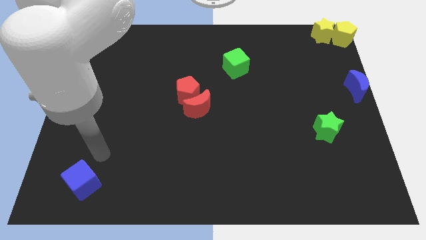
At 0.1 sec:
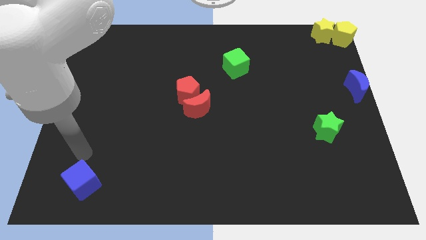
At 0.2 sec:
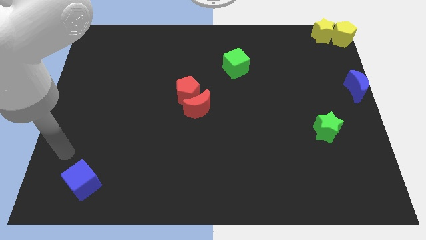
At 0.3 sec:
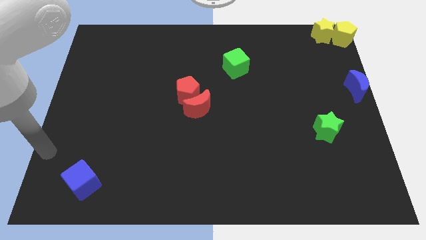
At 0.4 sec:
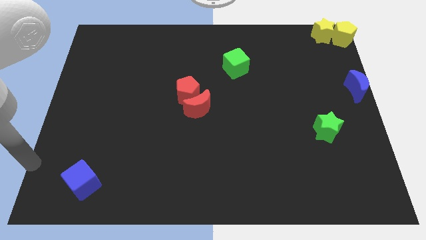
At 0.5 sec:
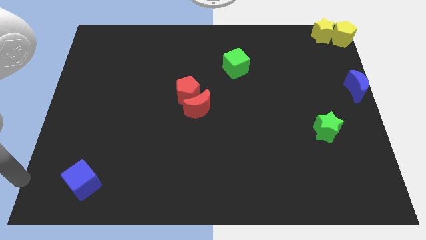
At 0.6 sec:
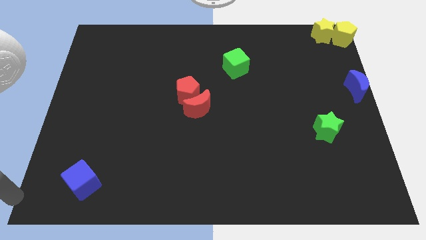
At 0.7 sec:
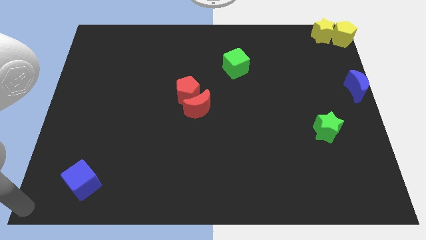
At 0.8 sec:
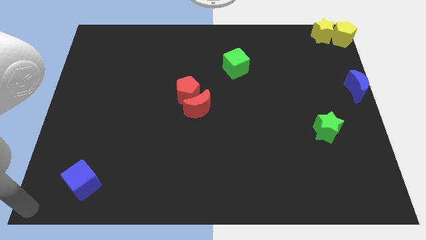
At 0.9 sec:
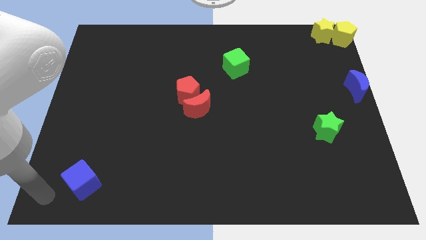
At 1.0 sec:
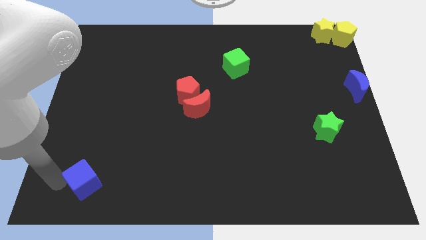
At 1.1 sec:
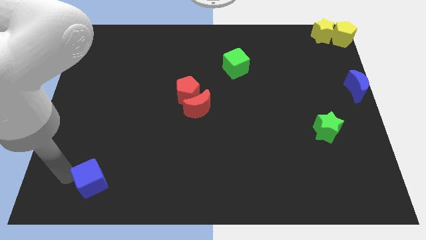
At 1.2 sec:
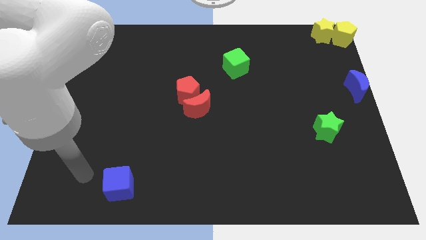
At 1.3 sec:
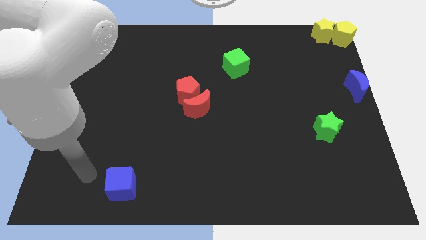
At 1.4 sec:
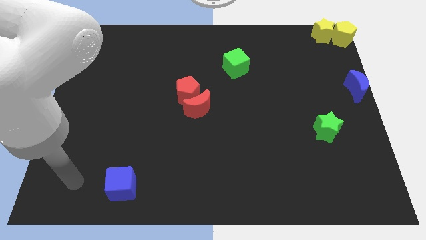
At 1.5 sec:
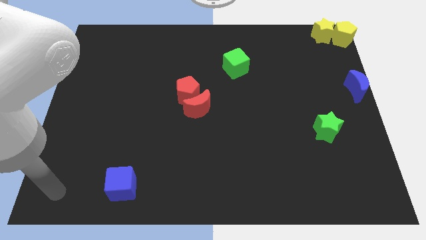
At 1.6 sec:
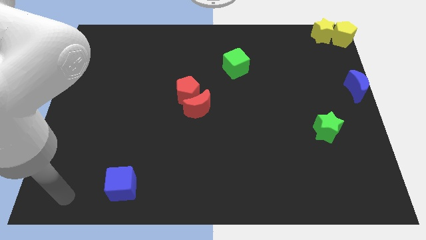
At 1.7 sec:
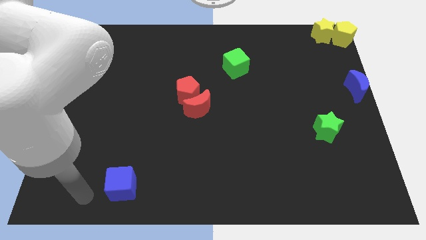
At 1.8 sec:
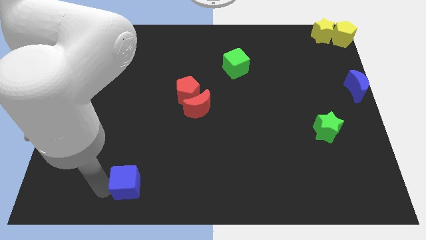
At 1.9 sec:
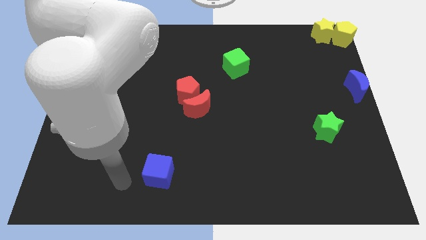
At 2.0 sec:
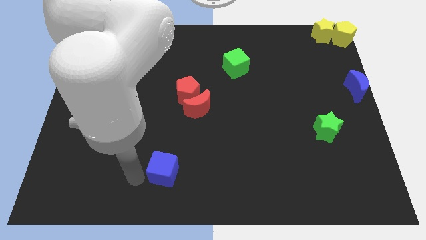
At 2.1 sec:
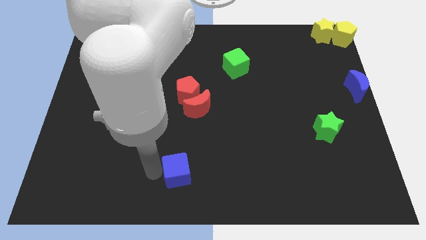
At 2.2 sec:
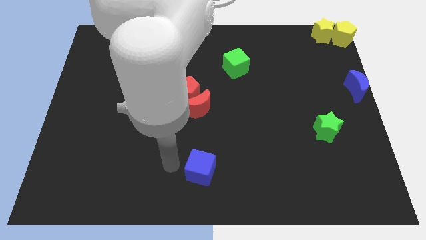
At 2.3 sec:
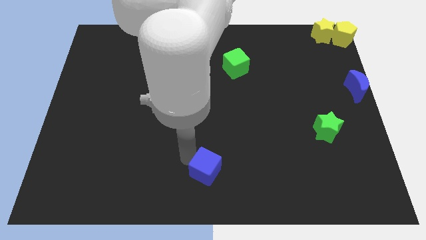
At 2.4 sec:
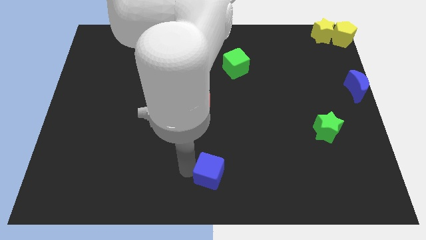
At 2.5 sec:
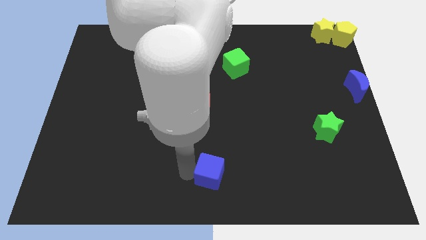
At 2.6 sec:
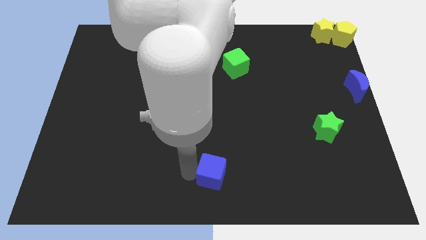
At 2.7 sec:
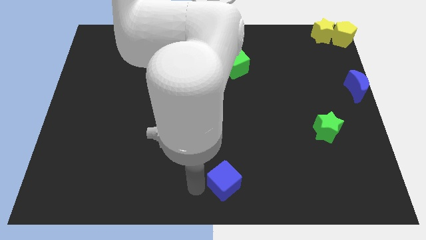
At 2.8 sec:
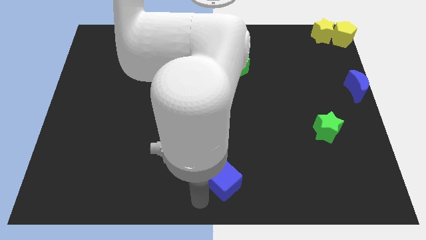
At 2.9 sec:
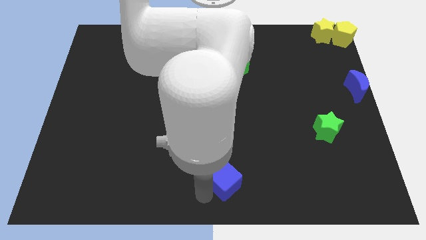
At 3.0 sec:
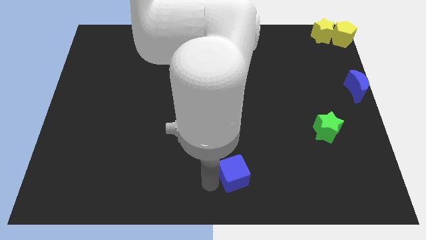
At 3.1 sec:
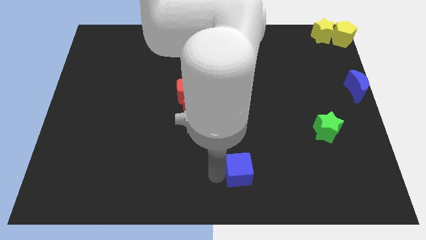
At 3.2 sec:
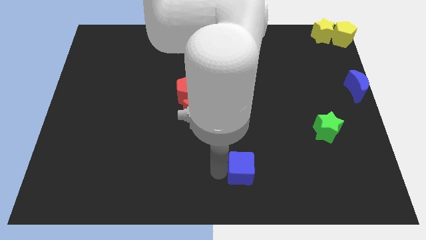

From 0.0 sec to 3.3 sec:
place the blue cube to the bottom of the green cube

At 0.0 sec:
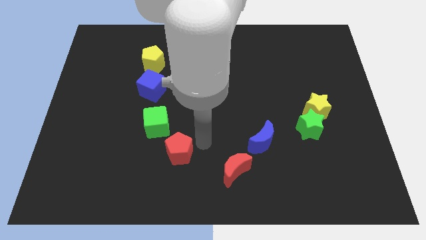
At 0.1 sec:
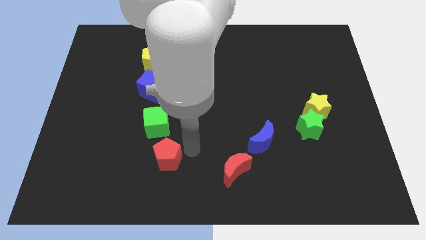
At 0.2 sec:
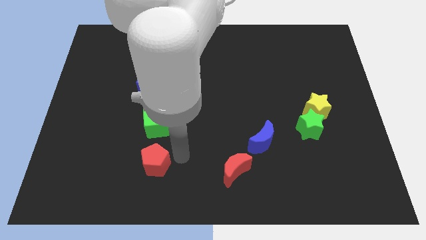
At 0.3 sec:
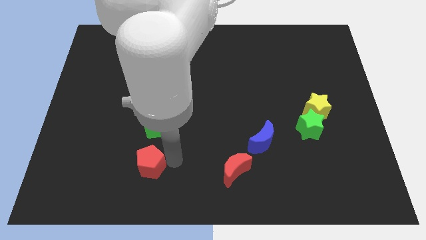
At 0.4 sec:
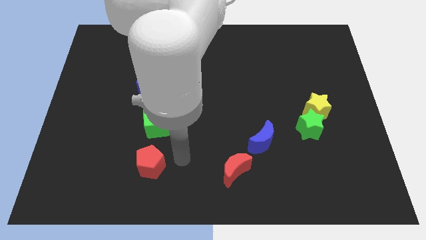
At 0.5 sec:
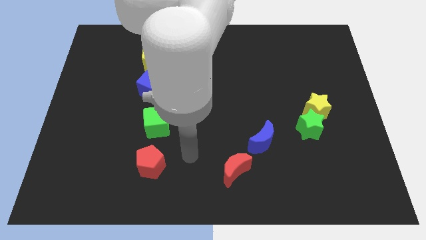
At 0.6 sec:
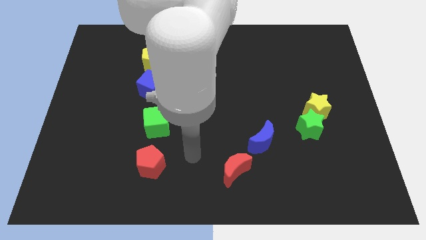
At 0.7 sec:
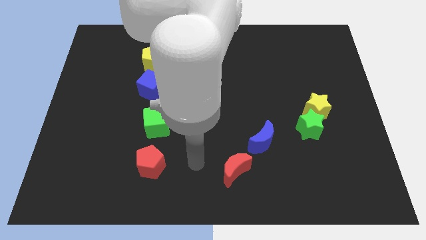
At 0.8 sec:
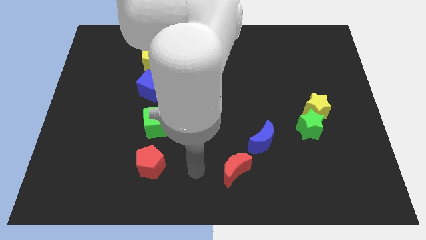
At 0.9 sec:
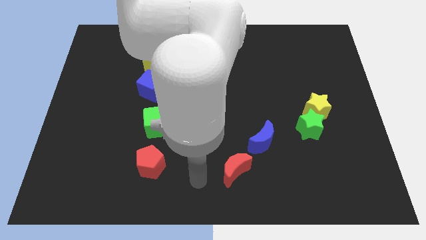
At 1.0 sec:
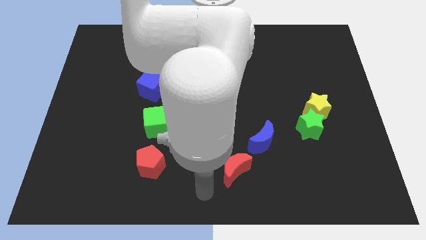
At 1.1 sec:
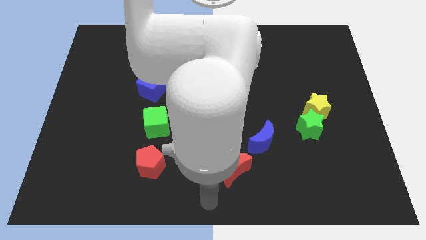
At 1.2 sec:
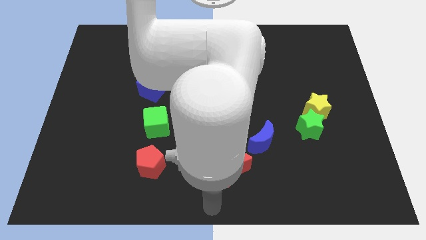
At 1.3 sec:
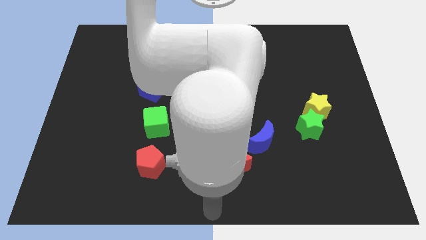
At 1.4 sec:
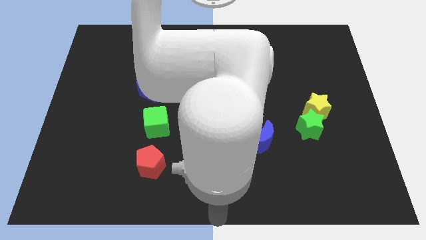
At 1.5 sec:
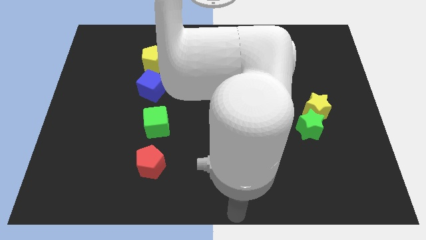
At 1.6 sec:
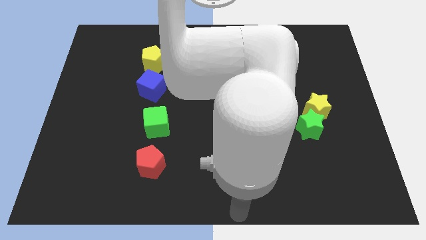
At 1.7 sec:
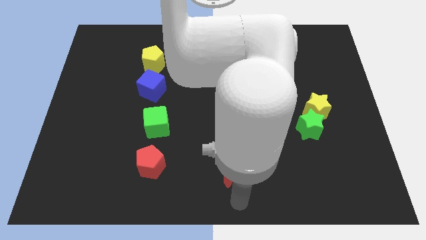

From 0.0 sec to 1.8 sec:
place the red pentagon on the bottom side of the green cube

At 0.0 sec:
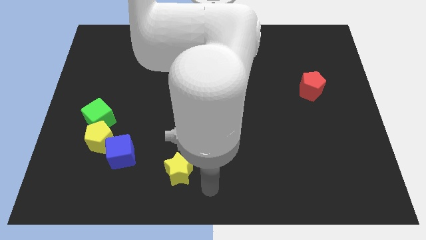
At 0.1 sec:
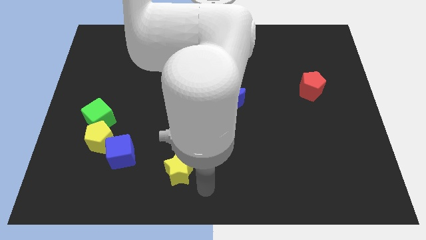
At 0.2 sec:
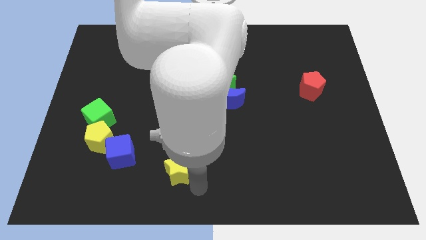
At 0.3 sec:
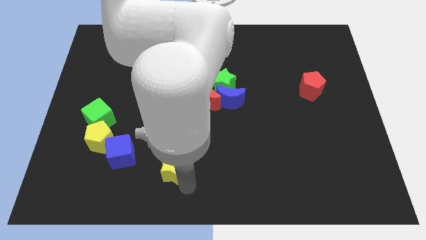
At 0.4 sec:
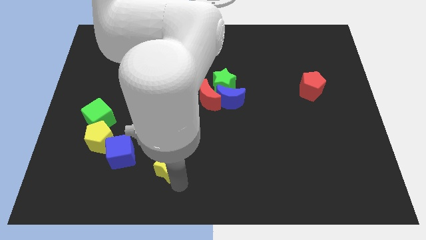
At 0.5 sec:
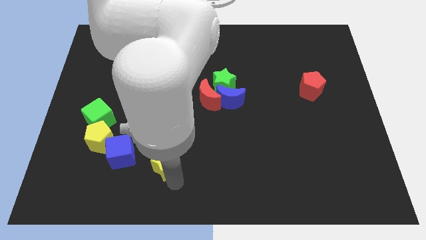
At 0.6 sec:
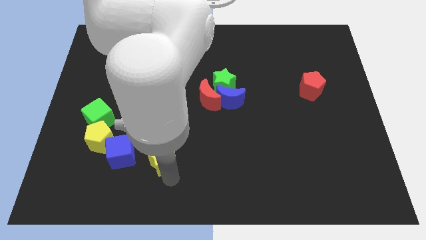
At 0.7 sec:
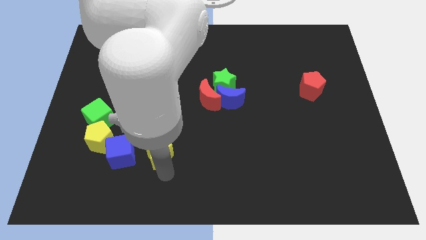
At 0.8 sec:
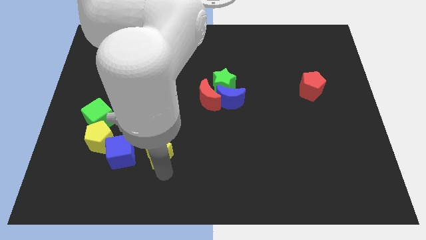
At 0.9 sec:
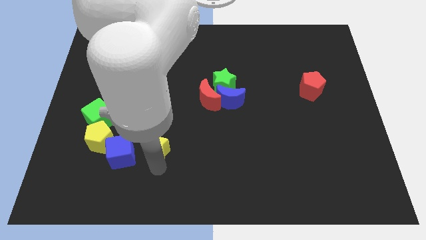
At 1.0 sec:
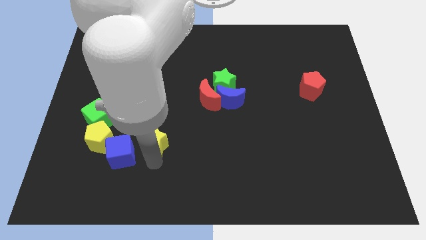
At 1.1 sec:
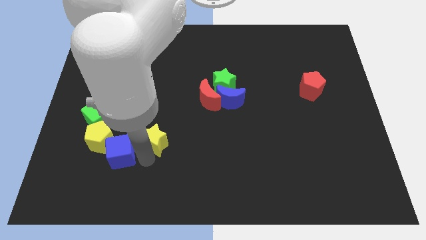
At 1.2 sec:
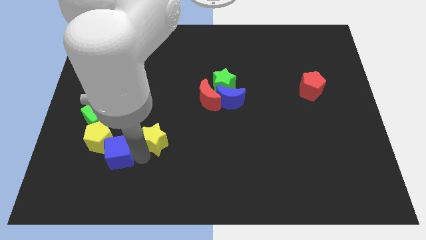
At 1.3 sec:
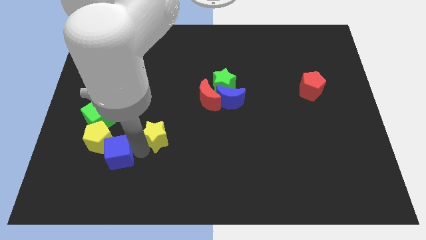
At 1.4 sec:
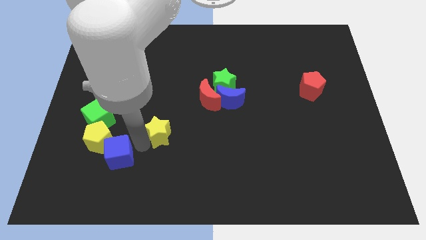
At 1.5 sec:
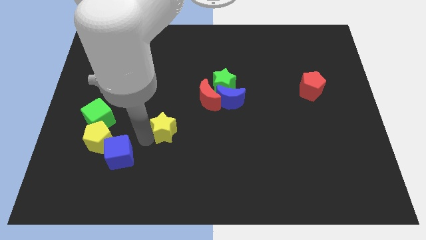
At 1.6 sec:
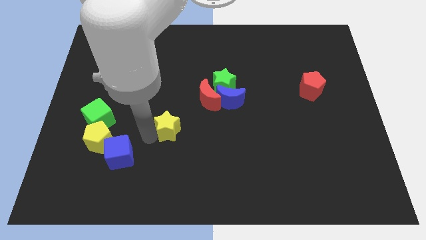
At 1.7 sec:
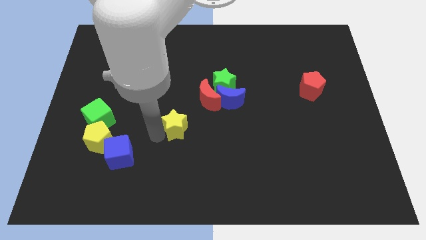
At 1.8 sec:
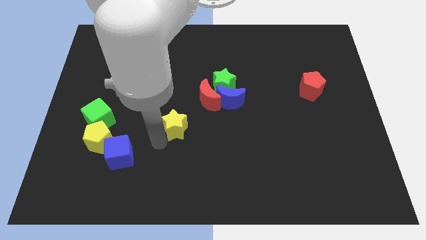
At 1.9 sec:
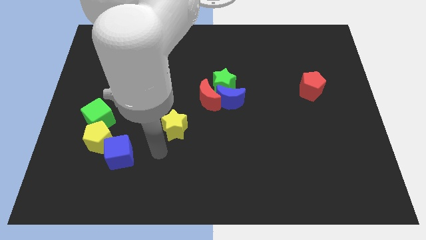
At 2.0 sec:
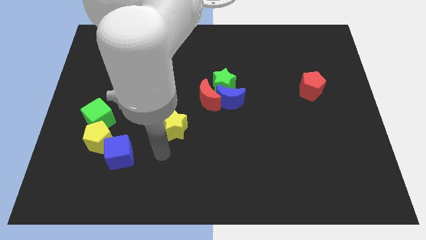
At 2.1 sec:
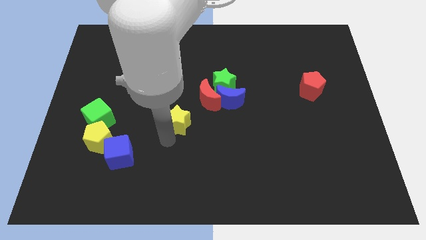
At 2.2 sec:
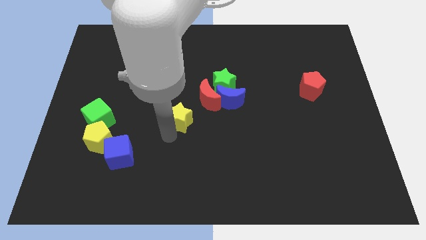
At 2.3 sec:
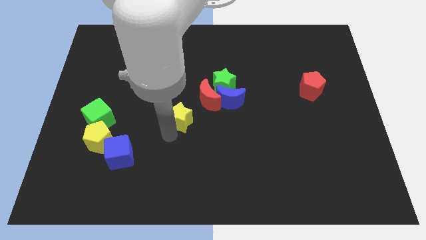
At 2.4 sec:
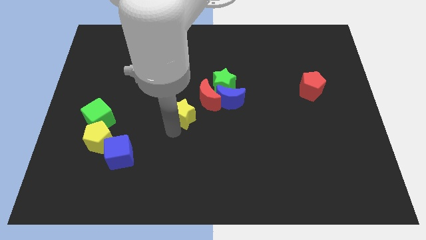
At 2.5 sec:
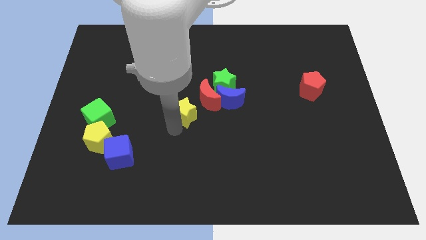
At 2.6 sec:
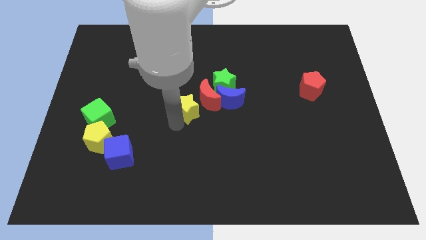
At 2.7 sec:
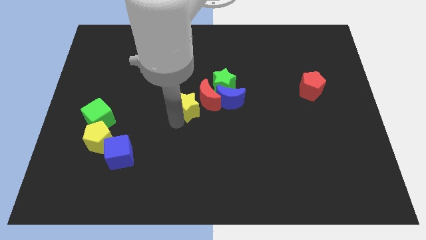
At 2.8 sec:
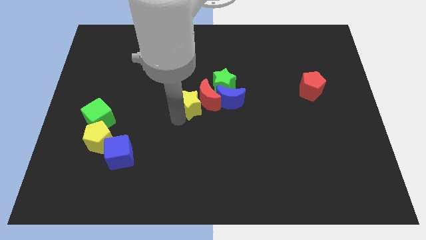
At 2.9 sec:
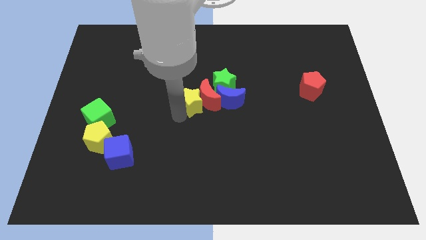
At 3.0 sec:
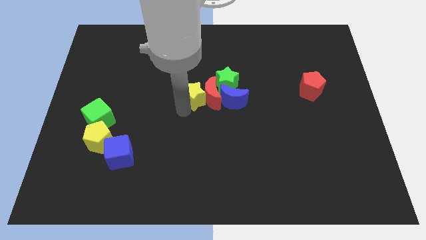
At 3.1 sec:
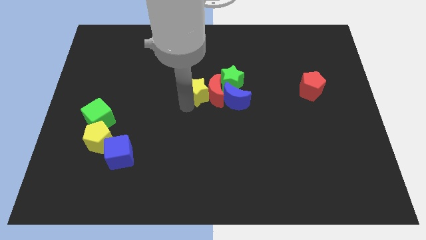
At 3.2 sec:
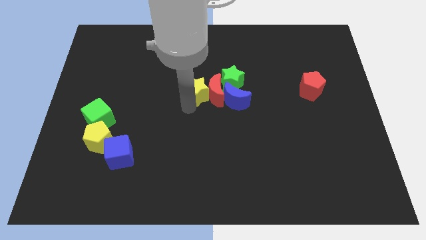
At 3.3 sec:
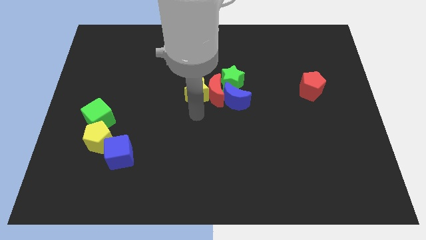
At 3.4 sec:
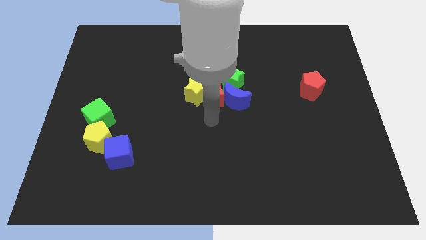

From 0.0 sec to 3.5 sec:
place the yellow star to the left of the red moon

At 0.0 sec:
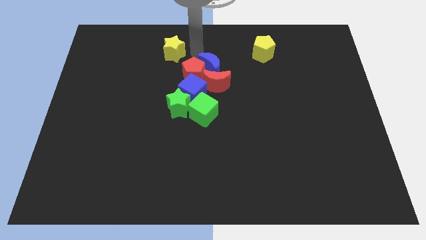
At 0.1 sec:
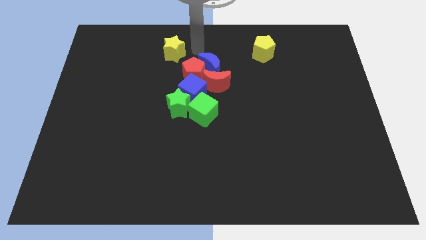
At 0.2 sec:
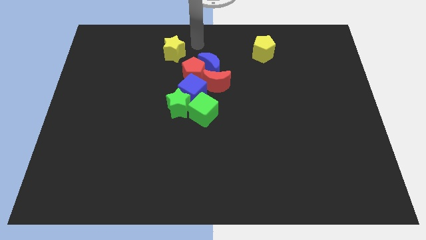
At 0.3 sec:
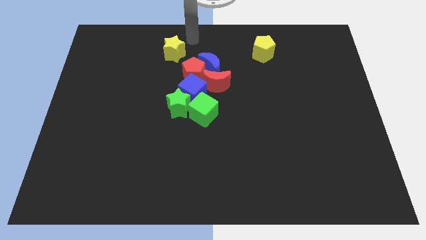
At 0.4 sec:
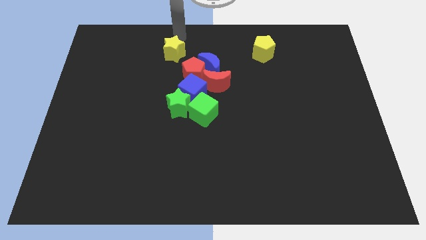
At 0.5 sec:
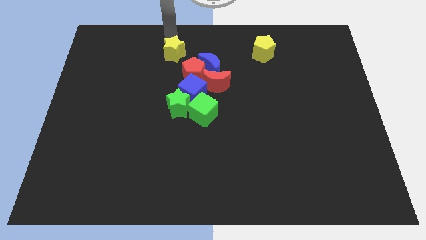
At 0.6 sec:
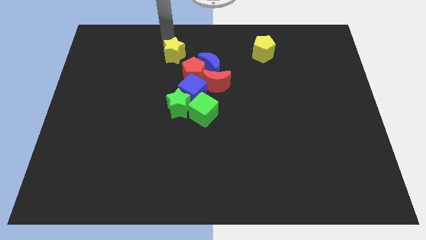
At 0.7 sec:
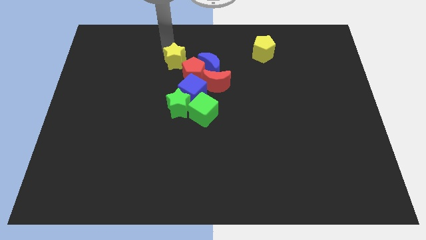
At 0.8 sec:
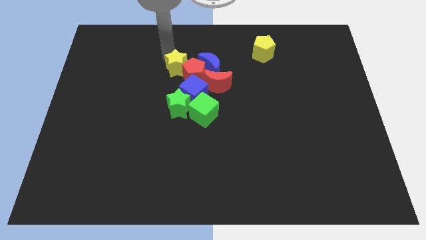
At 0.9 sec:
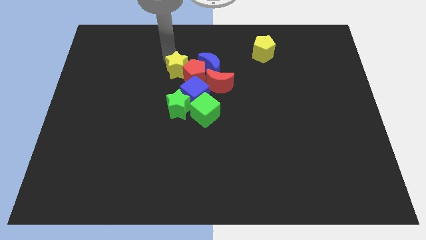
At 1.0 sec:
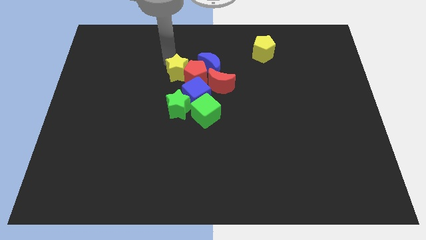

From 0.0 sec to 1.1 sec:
push yellow star into red pentagon
